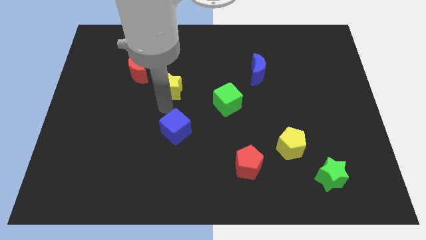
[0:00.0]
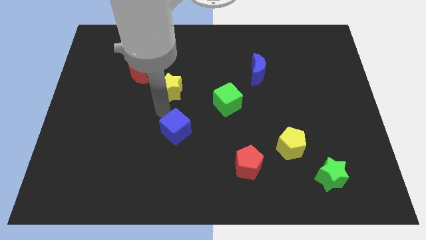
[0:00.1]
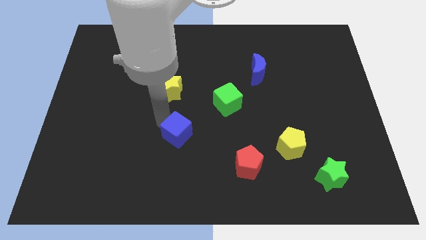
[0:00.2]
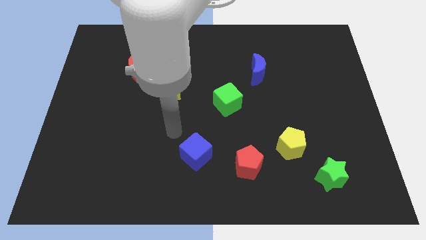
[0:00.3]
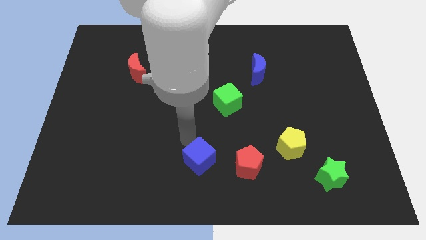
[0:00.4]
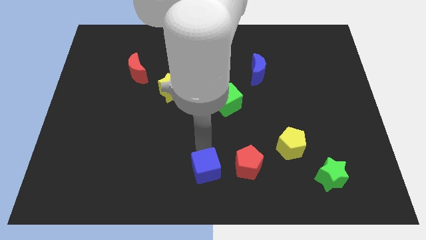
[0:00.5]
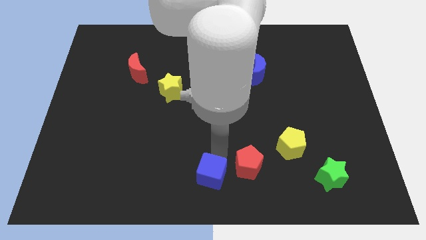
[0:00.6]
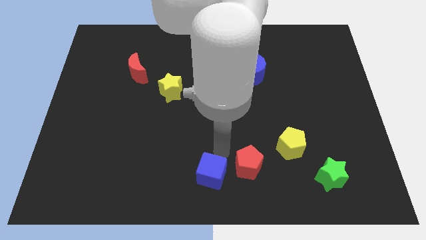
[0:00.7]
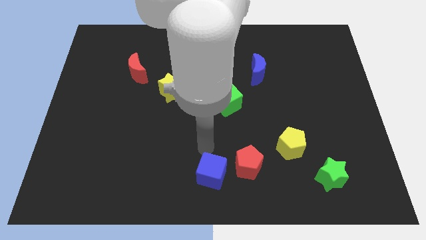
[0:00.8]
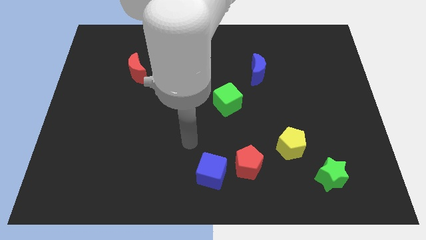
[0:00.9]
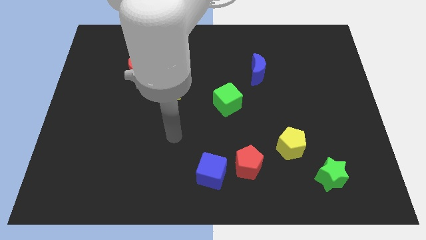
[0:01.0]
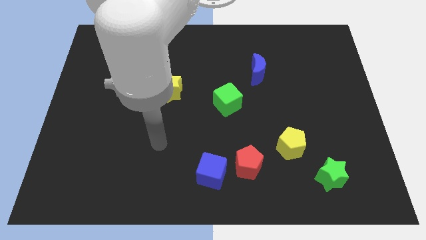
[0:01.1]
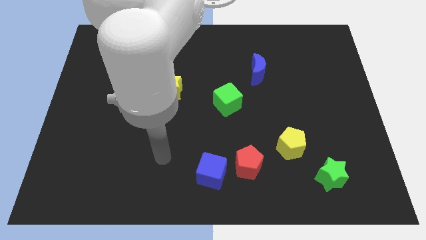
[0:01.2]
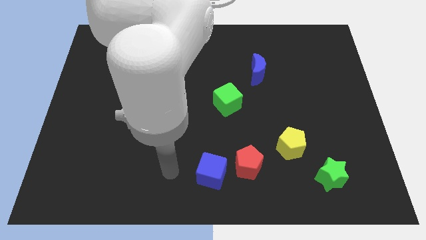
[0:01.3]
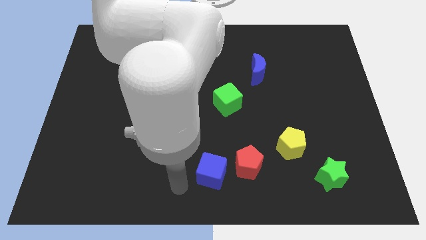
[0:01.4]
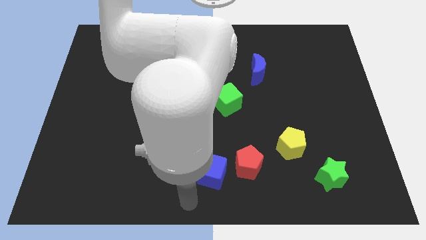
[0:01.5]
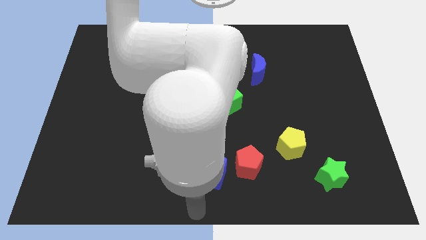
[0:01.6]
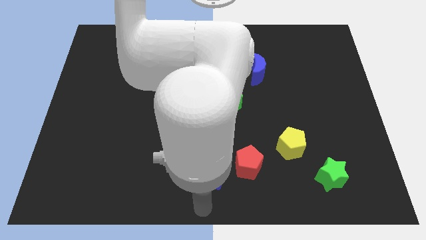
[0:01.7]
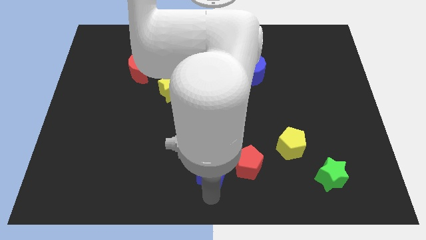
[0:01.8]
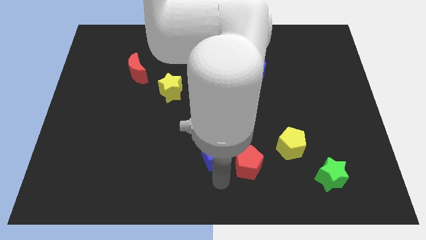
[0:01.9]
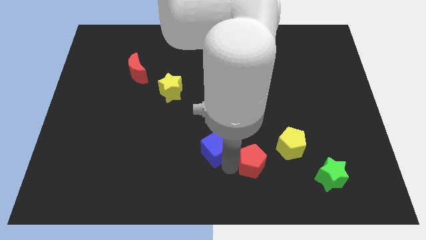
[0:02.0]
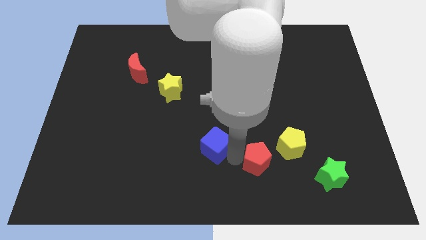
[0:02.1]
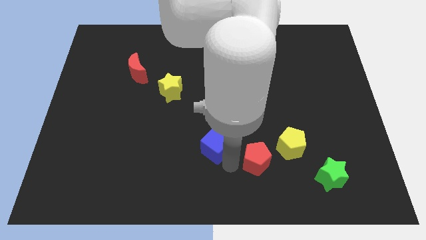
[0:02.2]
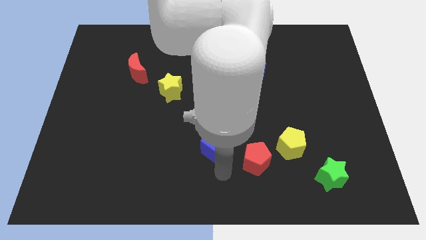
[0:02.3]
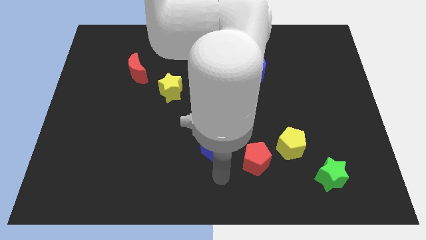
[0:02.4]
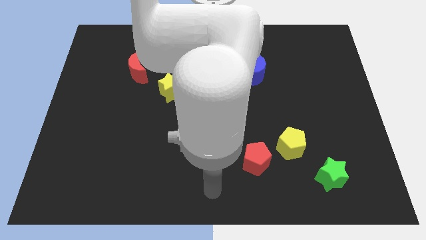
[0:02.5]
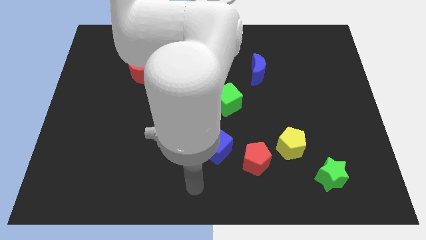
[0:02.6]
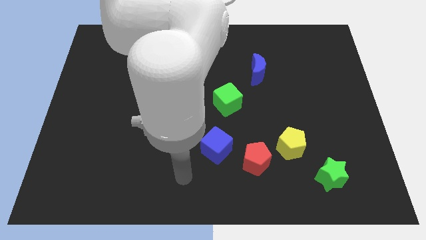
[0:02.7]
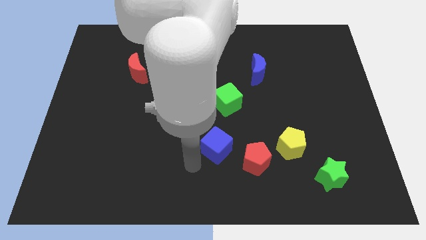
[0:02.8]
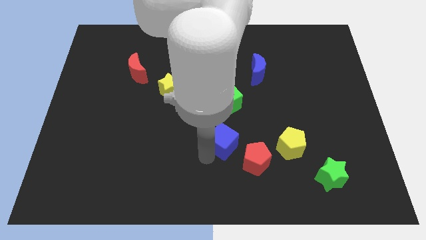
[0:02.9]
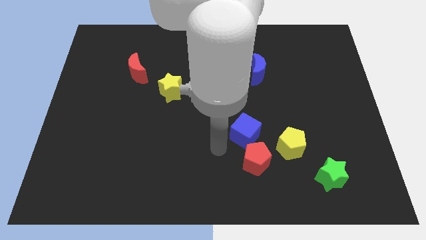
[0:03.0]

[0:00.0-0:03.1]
slide the blue cube at the upper left of the red pentagon

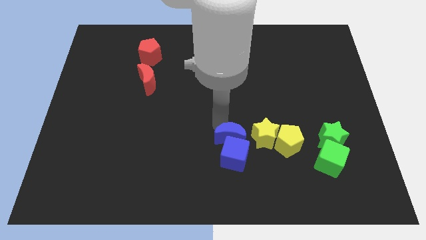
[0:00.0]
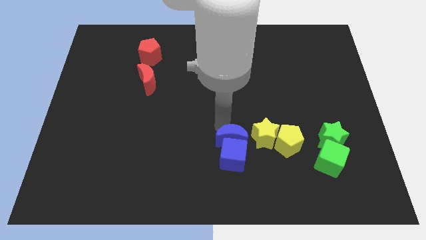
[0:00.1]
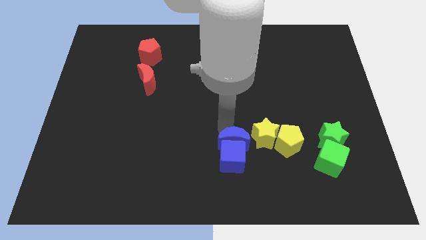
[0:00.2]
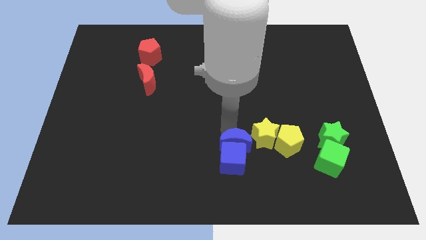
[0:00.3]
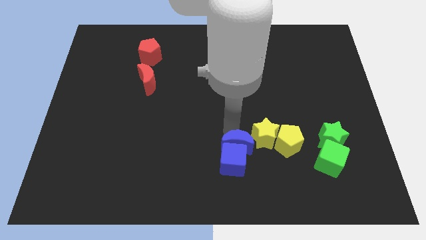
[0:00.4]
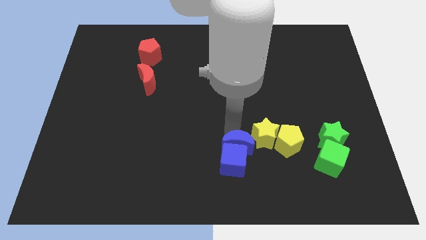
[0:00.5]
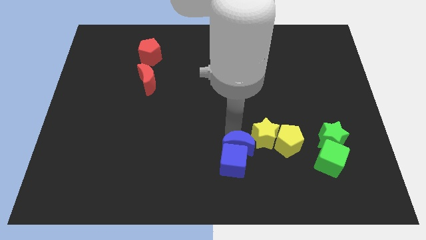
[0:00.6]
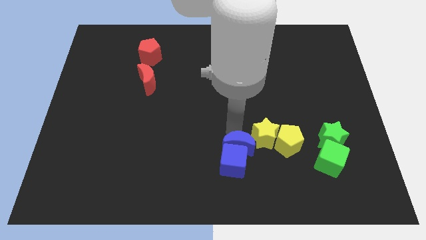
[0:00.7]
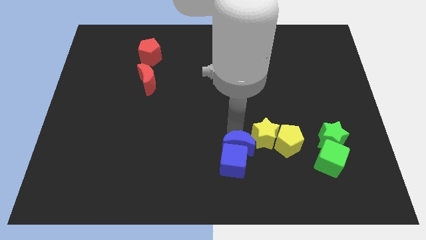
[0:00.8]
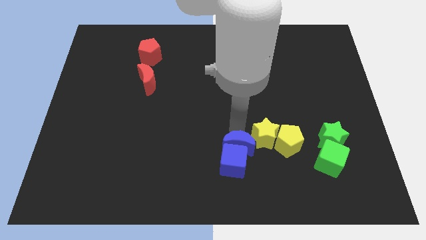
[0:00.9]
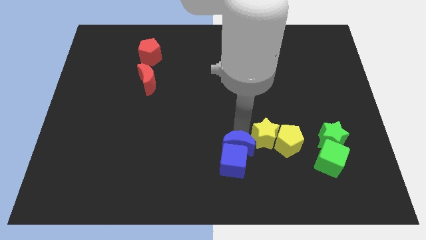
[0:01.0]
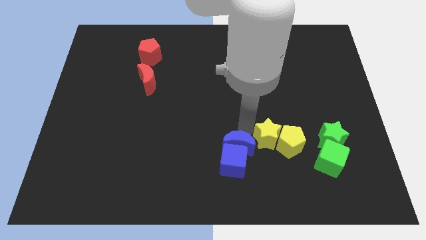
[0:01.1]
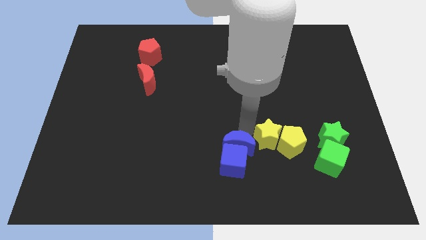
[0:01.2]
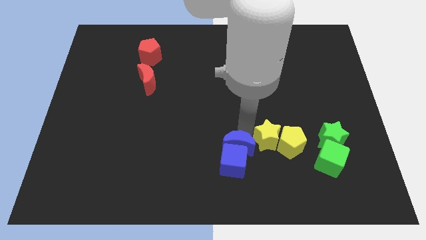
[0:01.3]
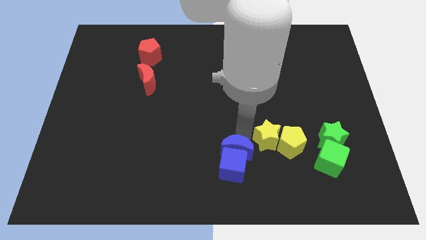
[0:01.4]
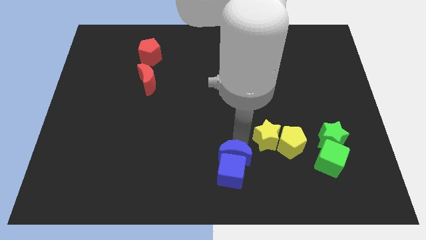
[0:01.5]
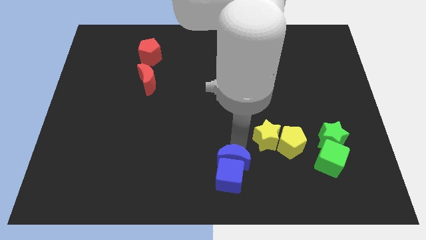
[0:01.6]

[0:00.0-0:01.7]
move the blue blocks to the bottom center of the board

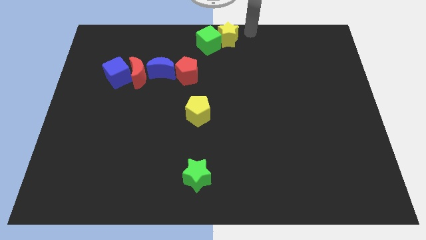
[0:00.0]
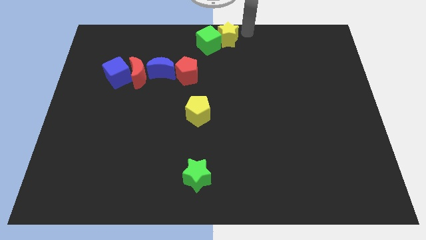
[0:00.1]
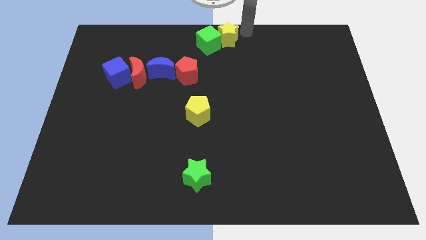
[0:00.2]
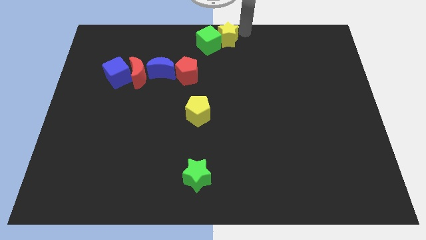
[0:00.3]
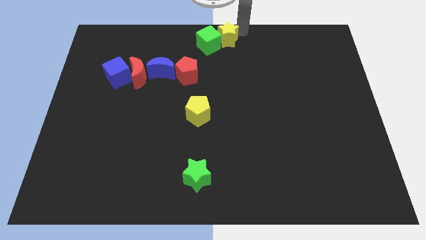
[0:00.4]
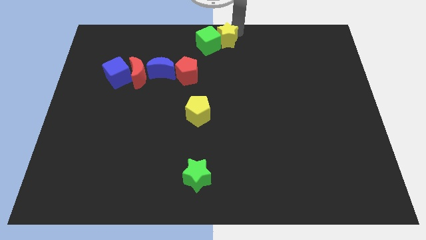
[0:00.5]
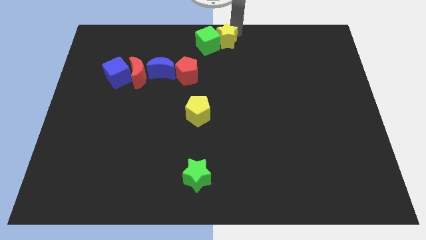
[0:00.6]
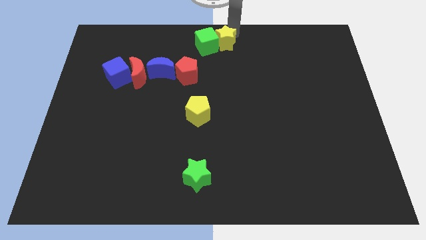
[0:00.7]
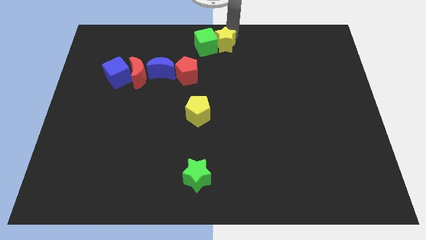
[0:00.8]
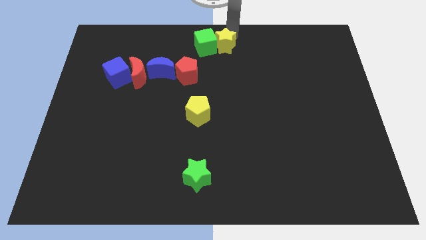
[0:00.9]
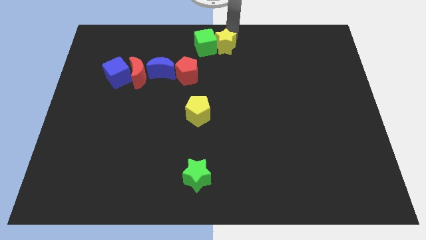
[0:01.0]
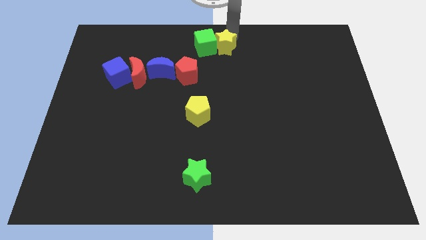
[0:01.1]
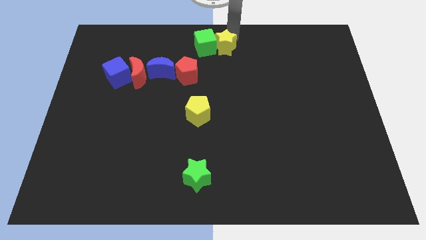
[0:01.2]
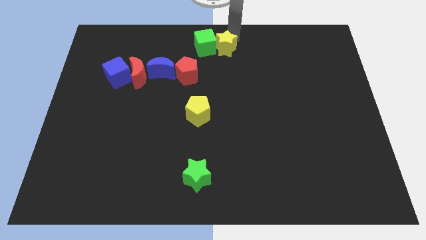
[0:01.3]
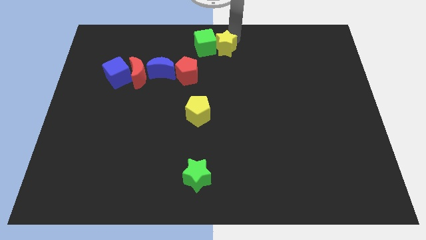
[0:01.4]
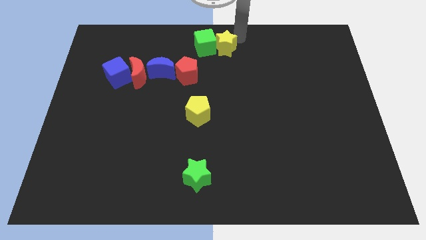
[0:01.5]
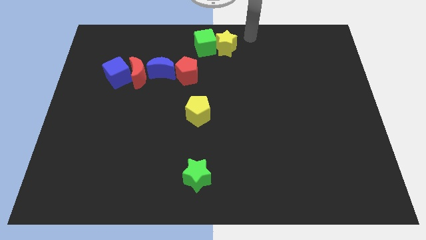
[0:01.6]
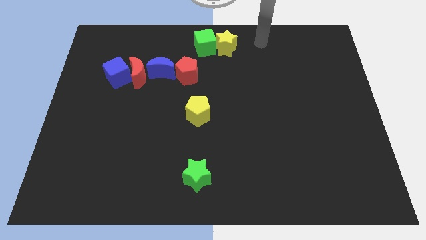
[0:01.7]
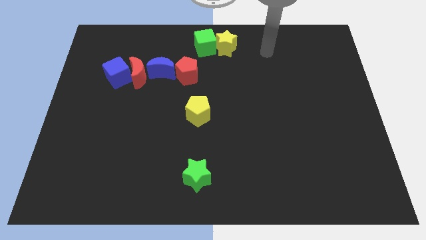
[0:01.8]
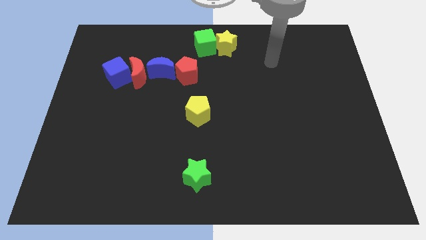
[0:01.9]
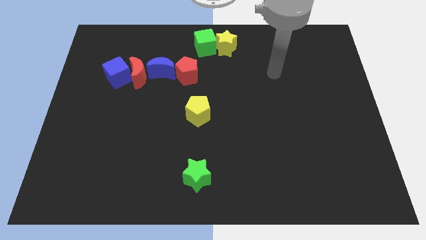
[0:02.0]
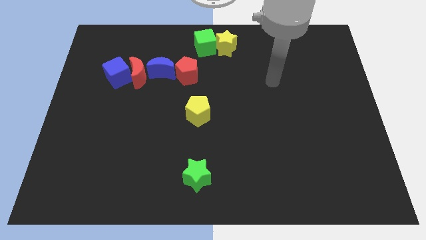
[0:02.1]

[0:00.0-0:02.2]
slightly push the yellow star to the bottom

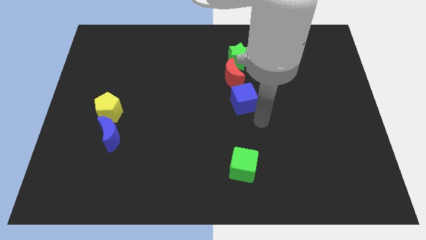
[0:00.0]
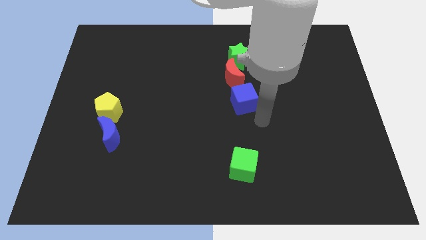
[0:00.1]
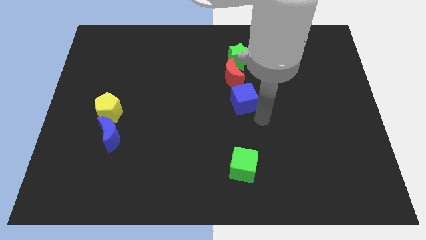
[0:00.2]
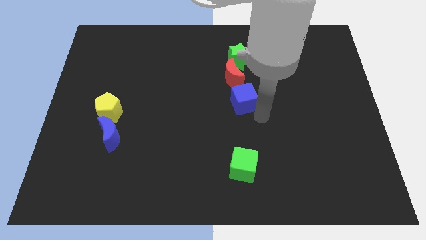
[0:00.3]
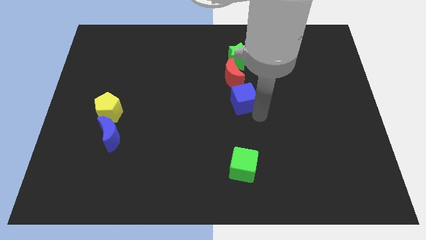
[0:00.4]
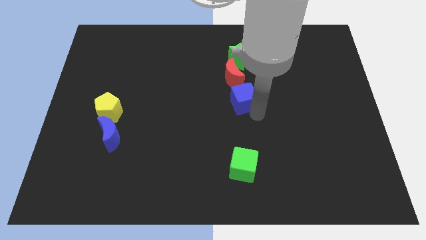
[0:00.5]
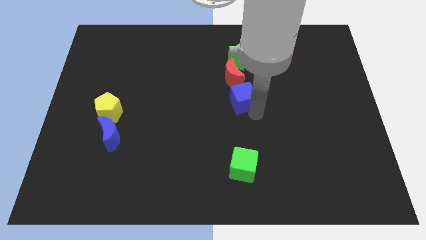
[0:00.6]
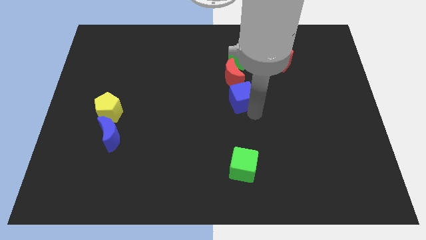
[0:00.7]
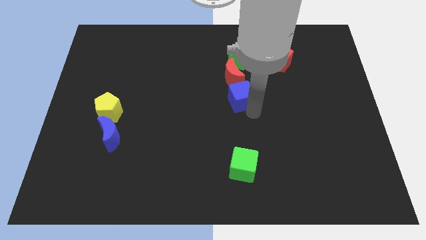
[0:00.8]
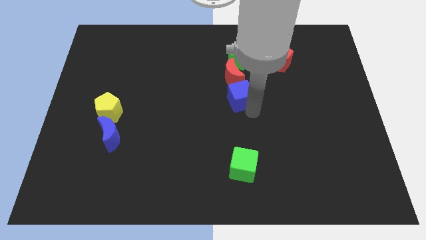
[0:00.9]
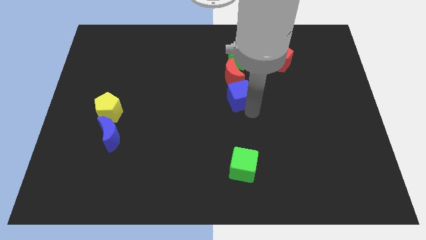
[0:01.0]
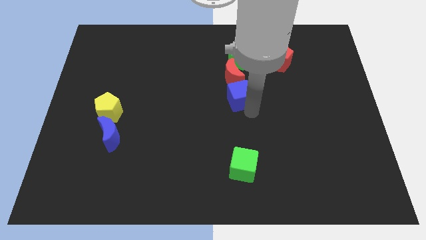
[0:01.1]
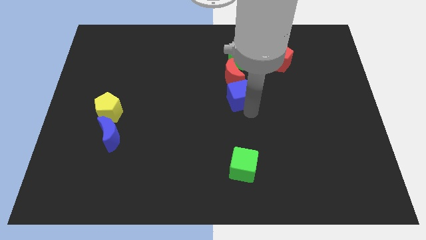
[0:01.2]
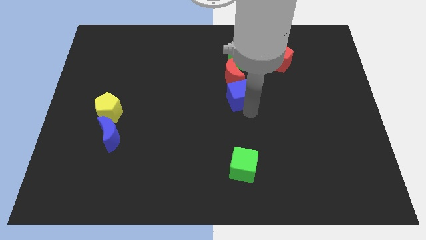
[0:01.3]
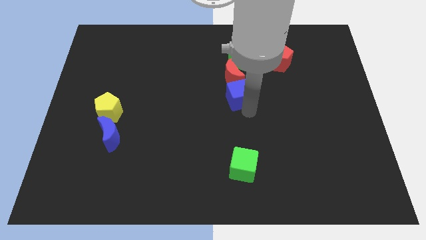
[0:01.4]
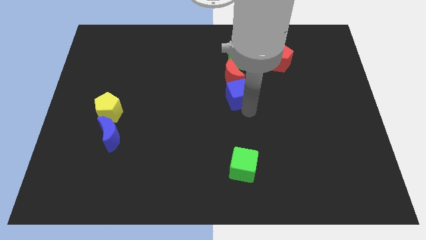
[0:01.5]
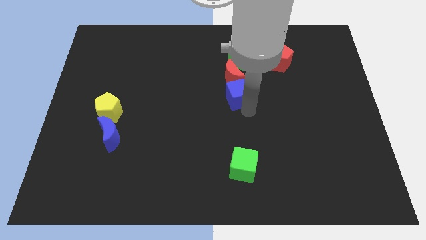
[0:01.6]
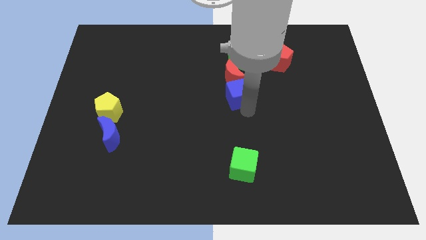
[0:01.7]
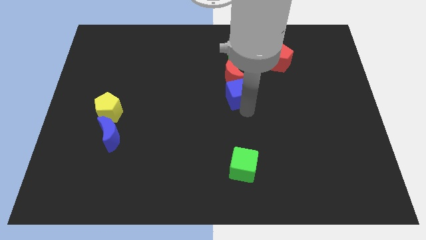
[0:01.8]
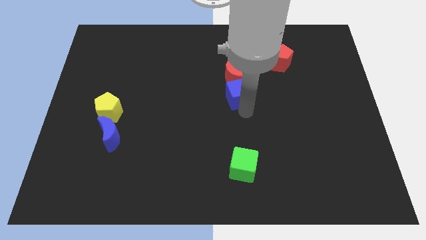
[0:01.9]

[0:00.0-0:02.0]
move blue cube to the bottom of red crescent

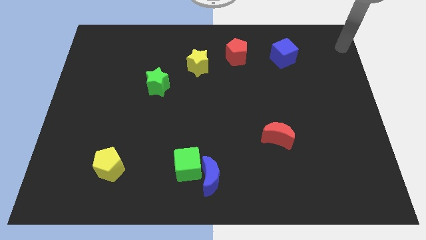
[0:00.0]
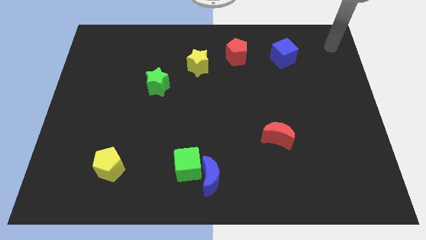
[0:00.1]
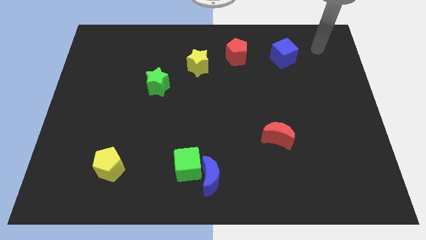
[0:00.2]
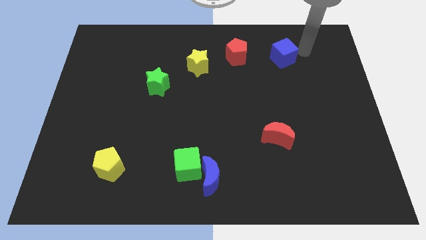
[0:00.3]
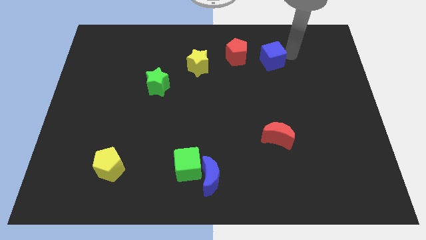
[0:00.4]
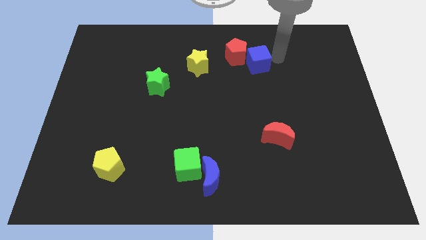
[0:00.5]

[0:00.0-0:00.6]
push the blue cube towards the red pentagon
